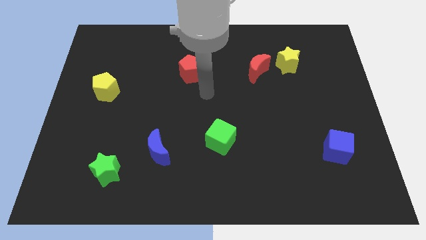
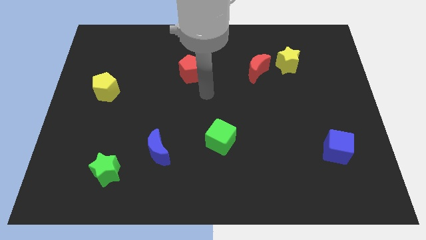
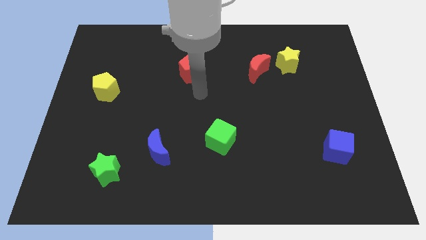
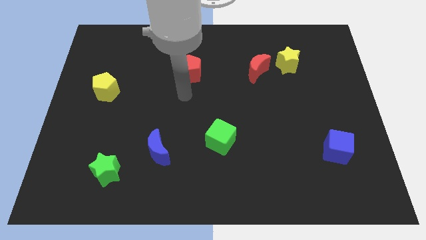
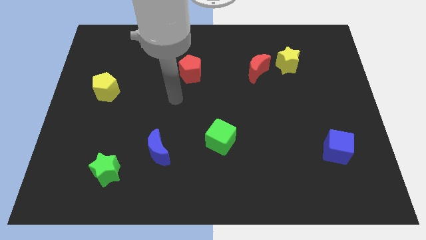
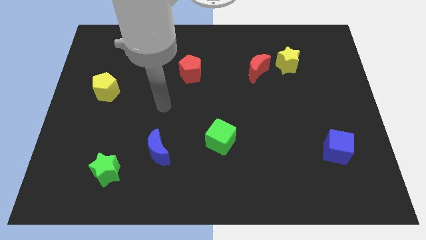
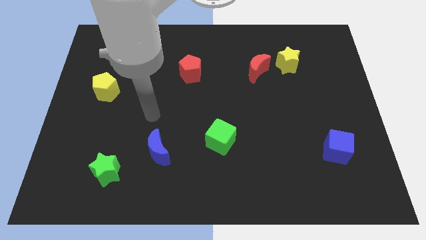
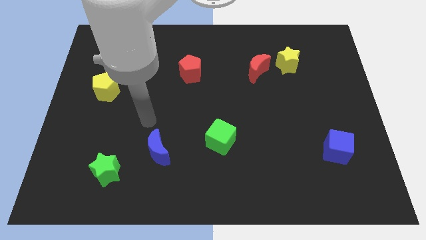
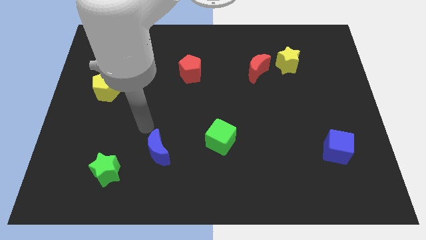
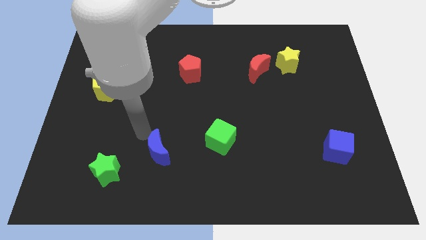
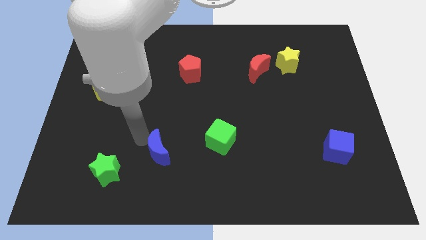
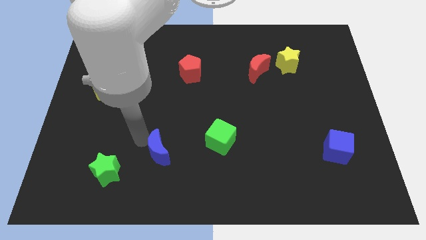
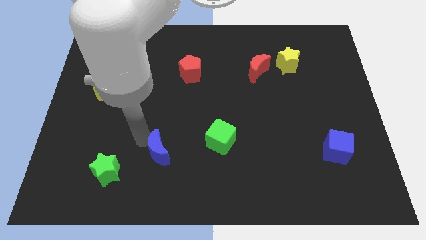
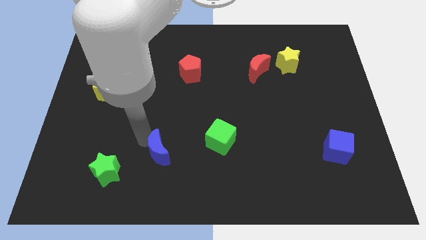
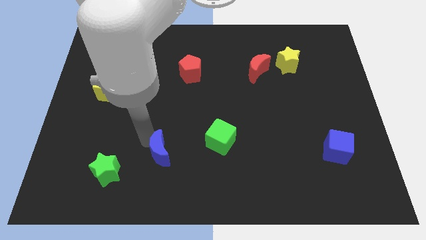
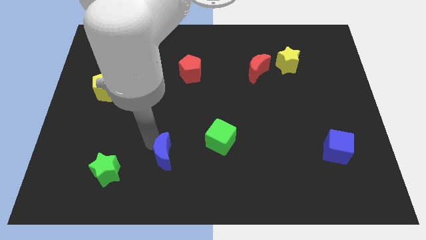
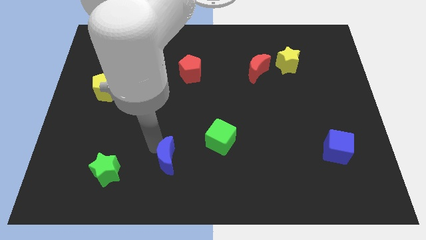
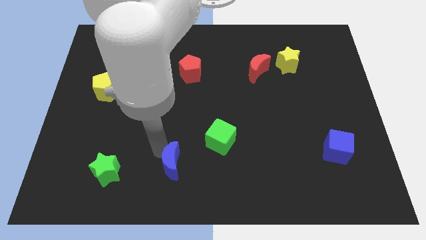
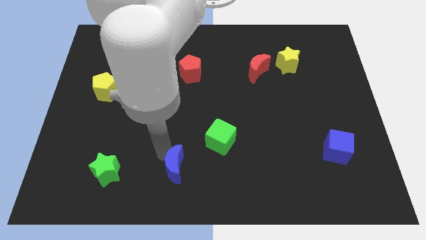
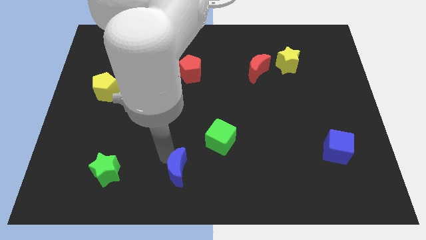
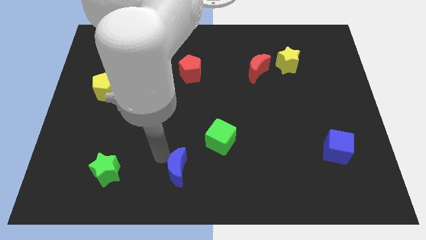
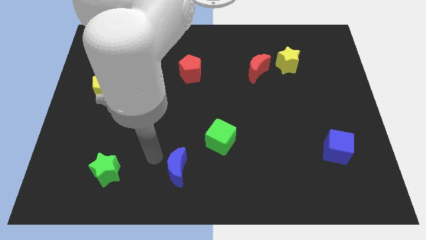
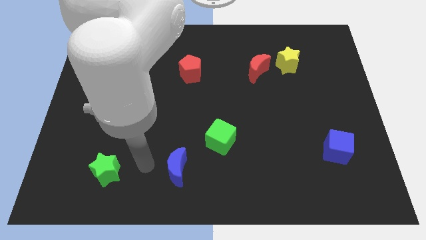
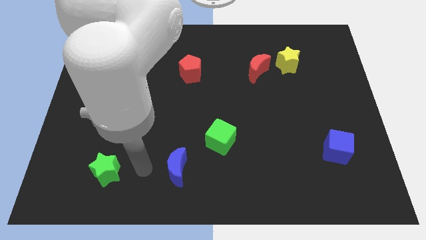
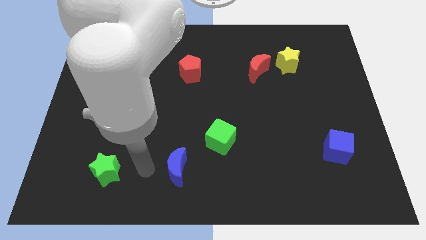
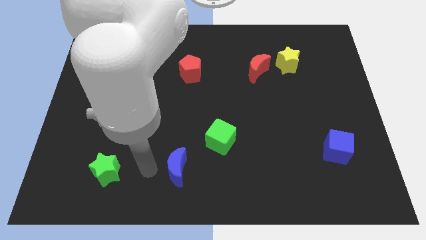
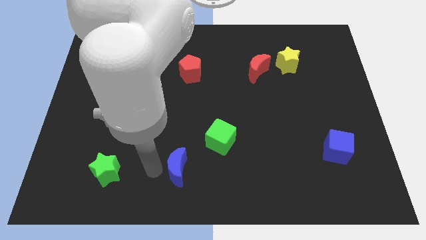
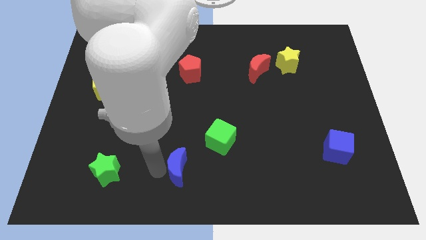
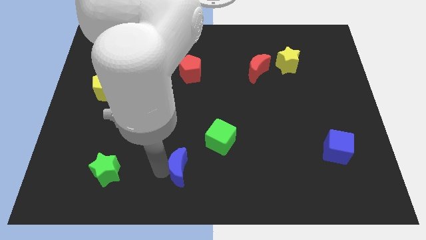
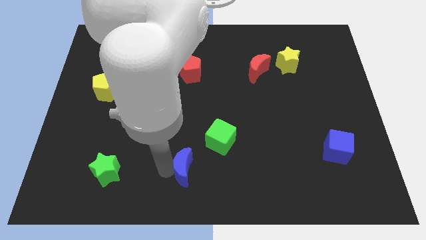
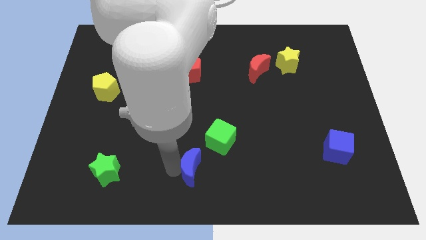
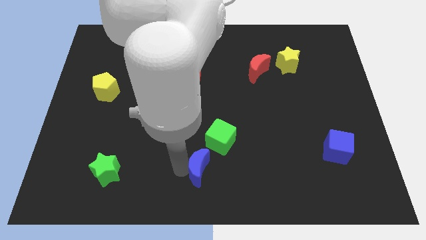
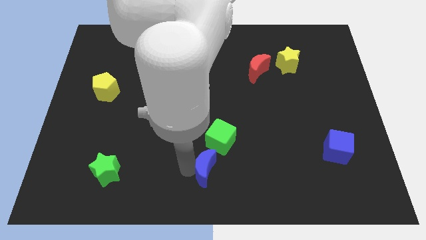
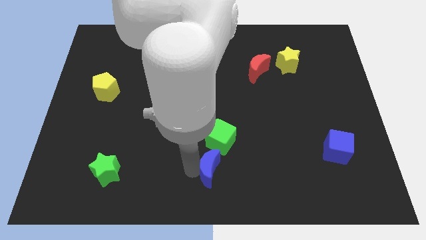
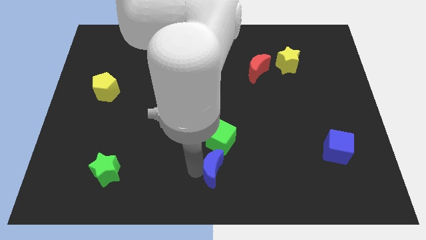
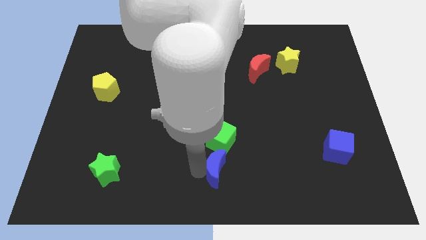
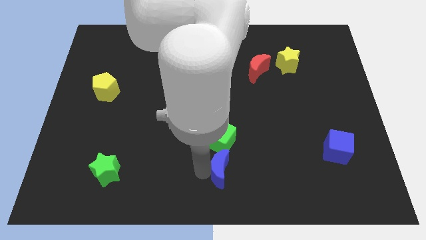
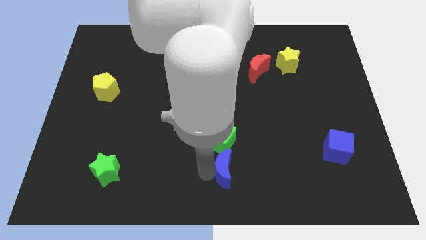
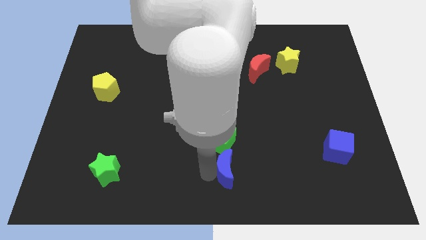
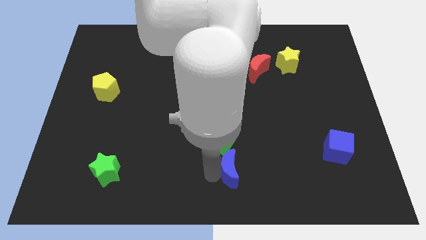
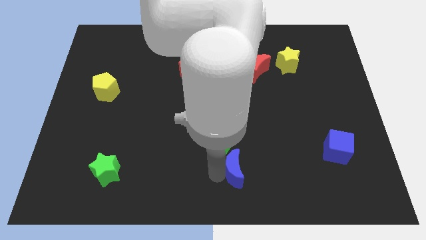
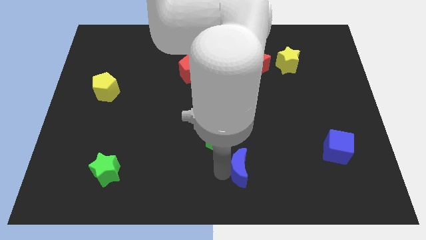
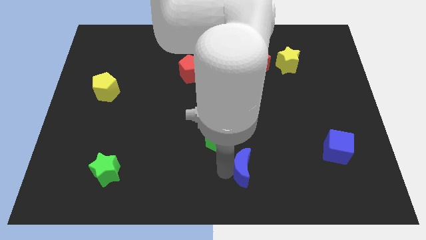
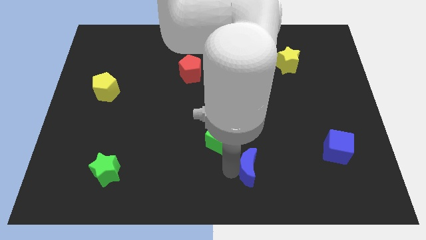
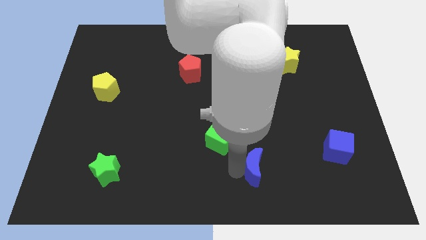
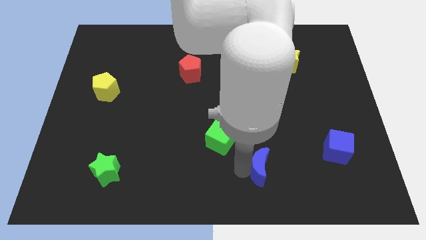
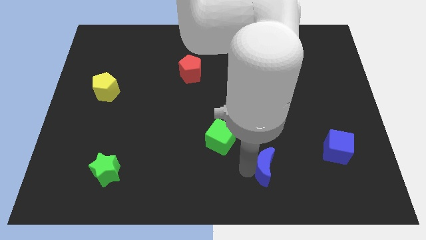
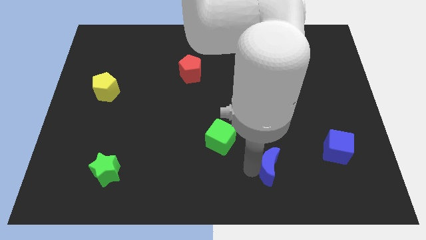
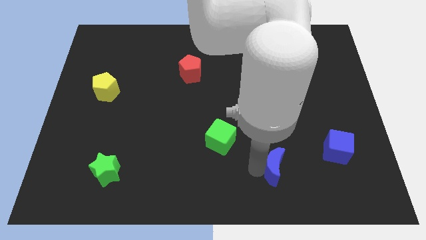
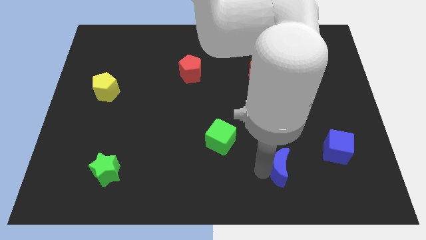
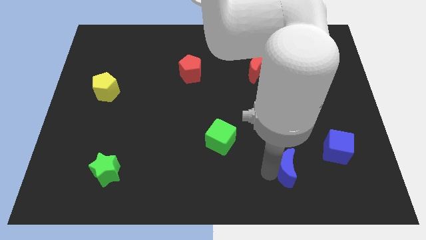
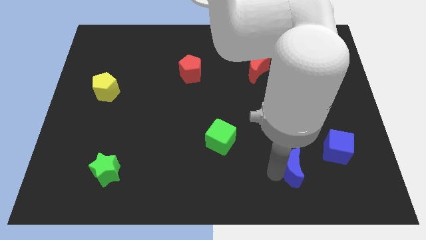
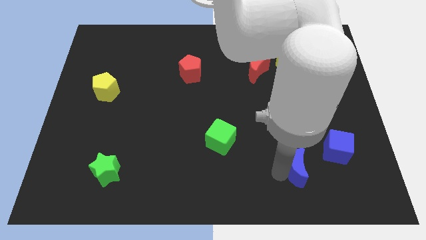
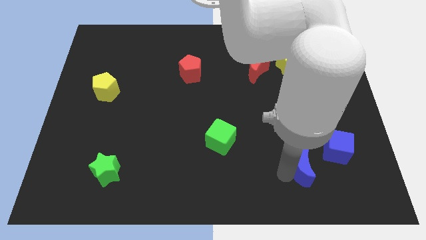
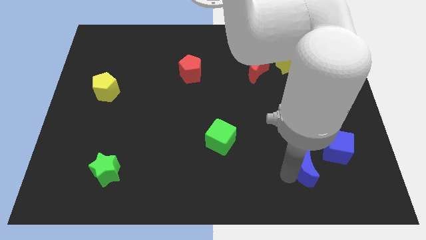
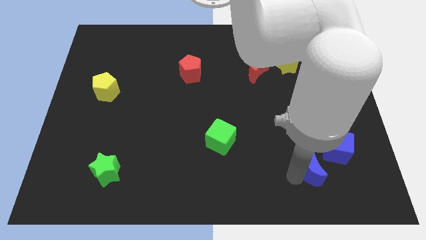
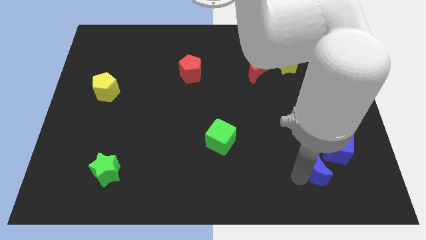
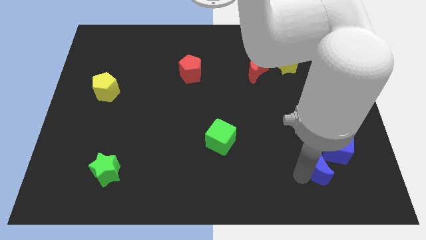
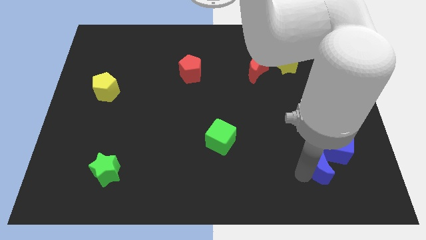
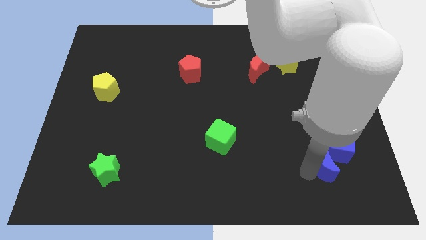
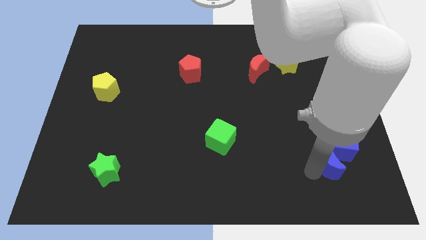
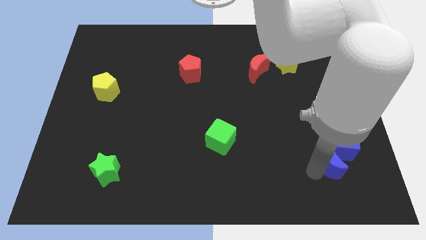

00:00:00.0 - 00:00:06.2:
slide the blue moon close to the blue cube

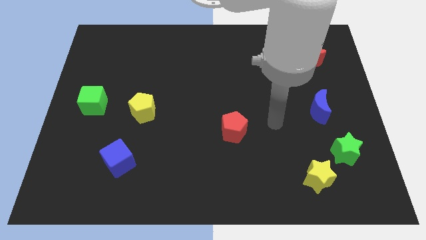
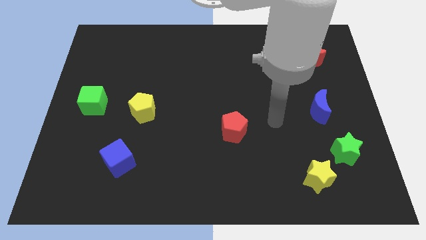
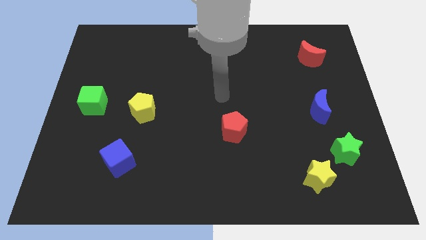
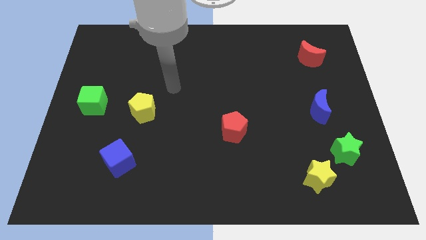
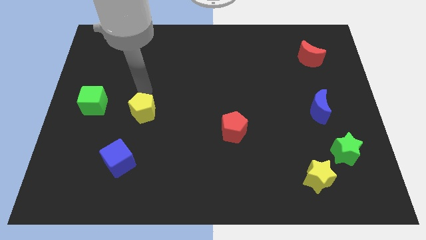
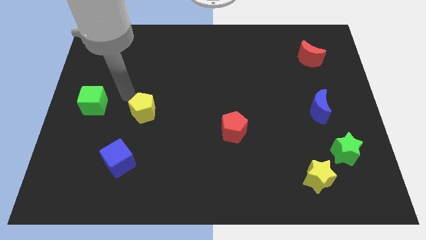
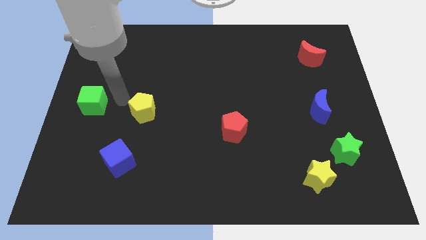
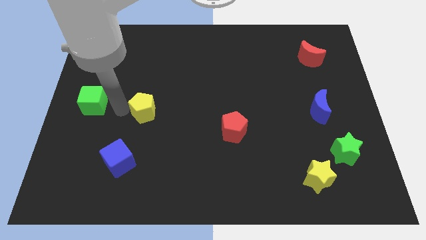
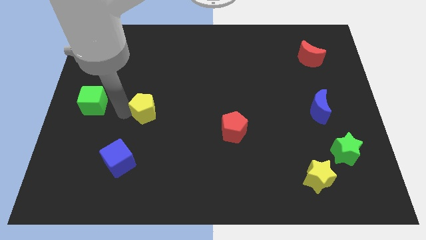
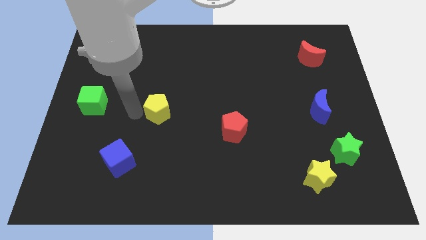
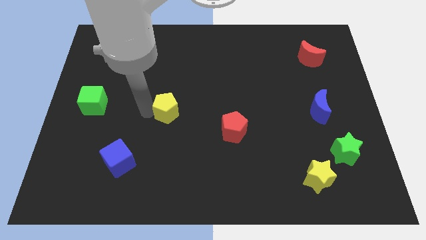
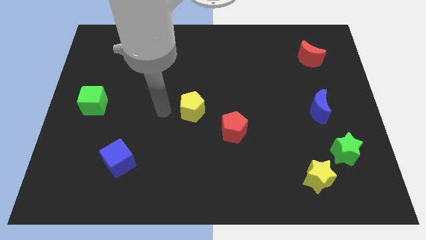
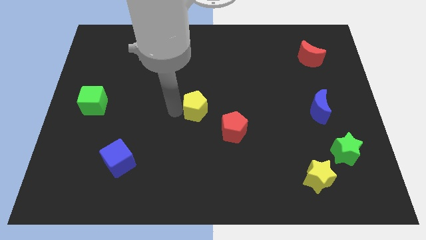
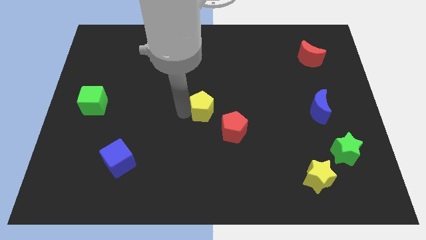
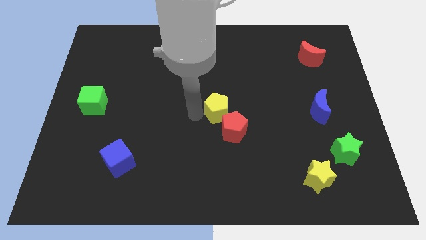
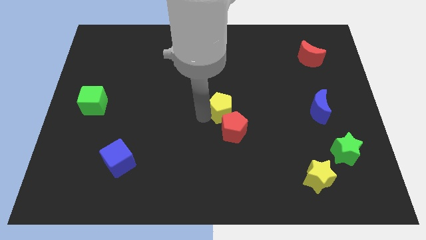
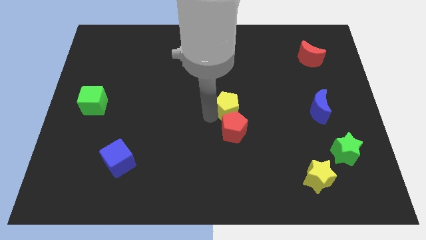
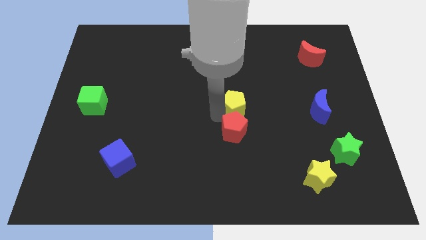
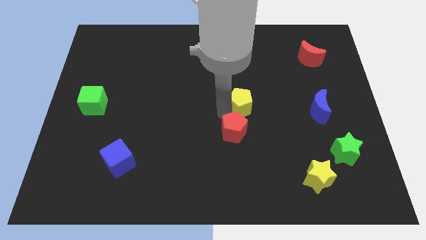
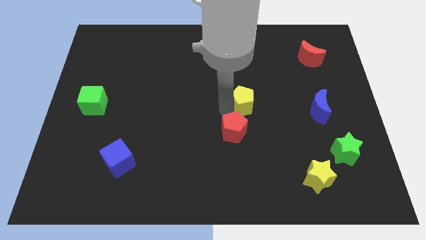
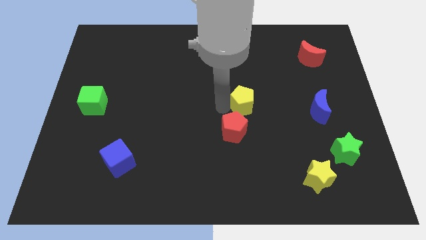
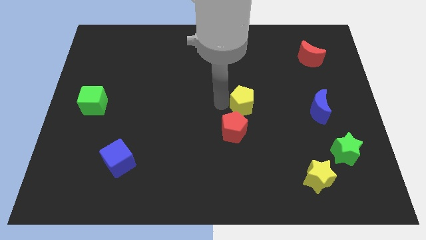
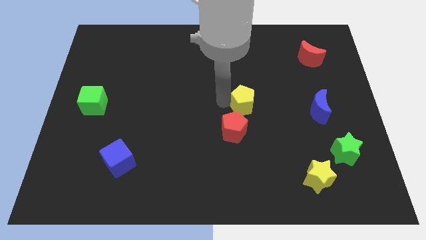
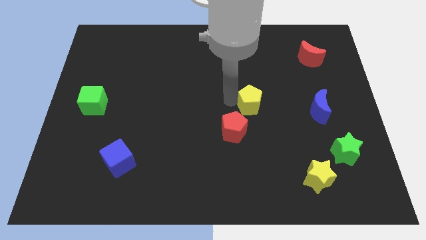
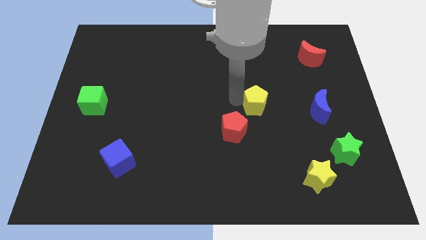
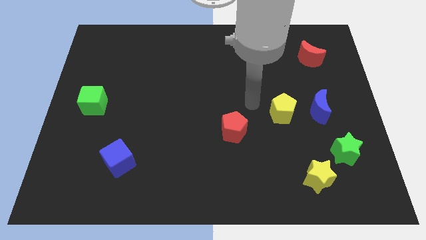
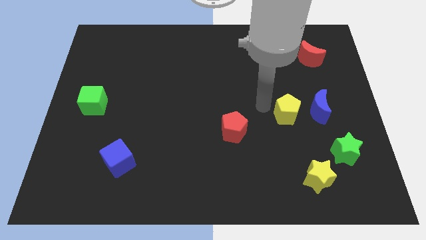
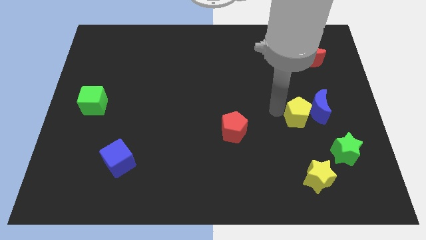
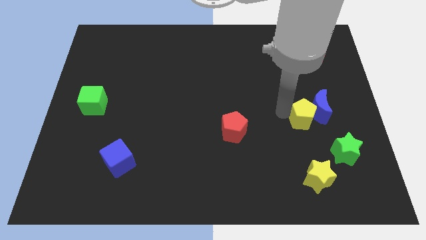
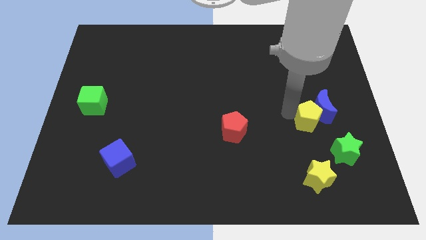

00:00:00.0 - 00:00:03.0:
push the yellow pentagon to the blue moon
